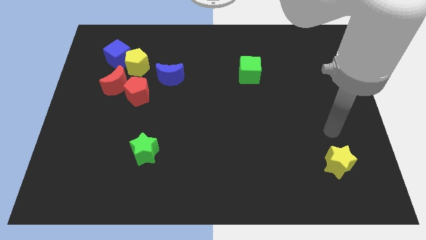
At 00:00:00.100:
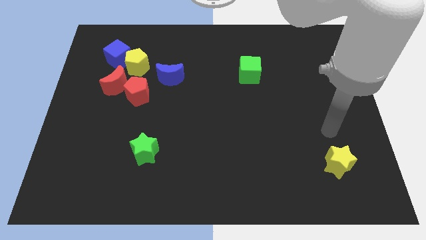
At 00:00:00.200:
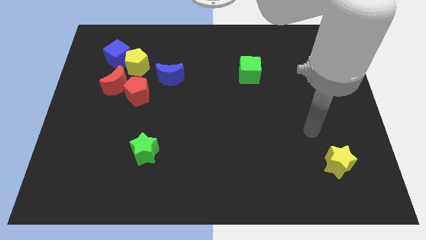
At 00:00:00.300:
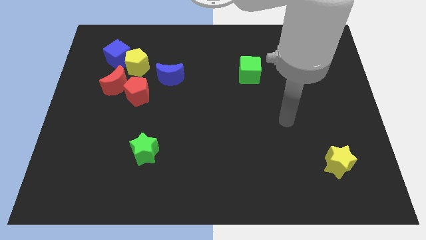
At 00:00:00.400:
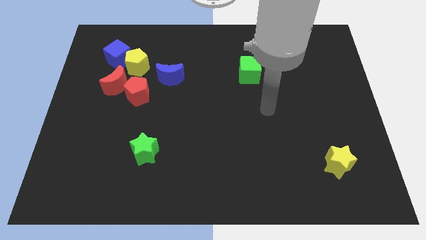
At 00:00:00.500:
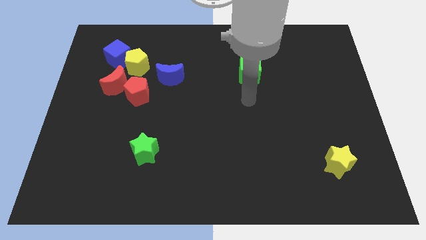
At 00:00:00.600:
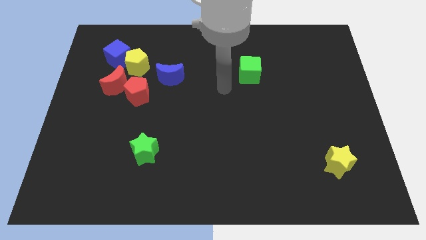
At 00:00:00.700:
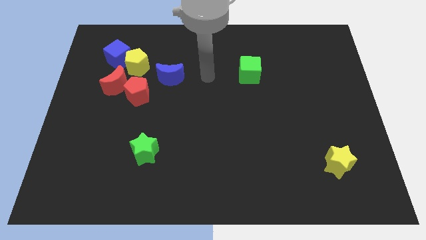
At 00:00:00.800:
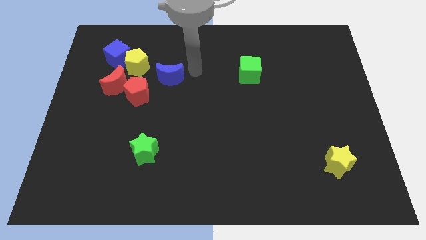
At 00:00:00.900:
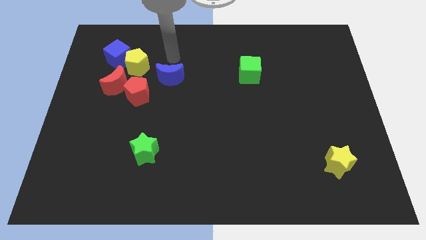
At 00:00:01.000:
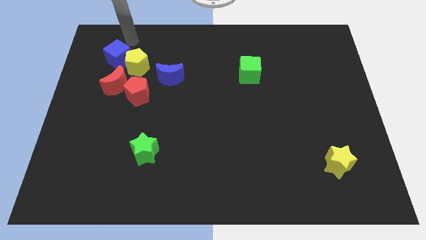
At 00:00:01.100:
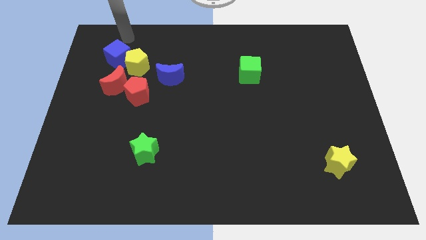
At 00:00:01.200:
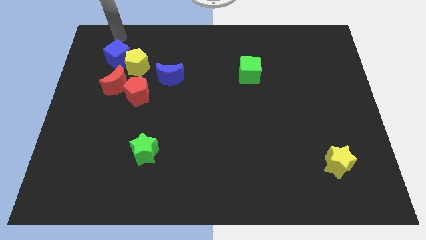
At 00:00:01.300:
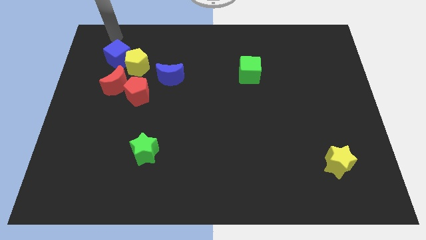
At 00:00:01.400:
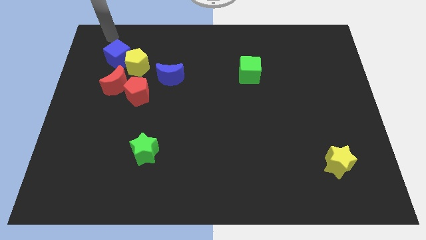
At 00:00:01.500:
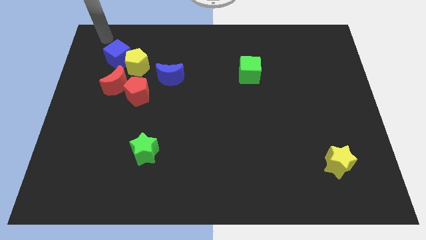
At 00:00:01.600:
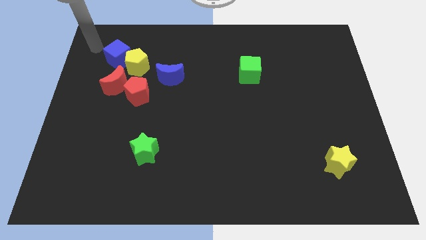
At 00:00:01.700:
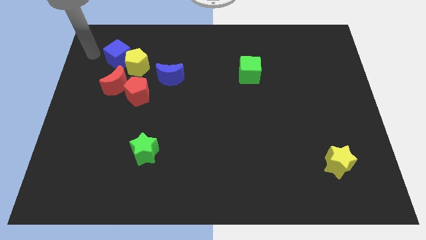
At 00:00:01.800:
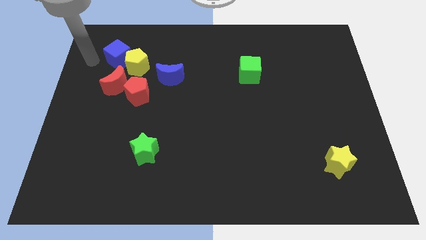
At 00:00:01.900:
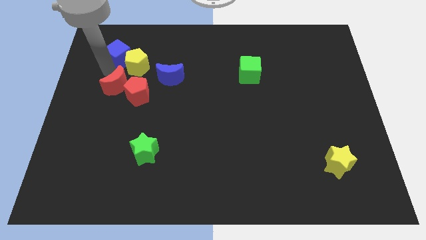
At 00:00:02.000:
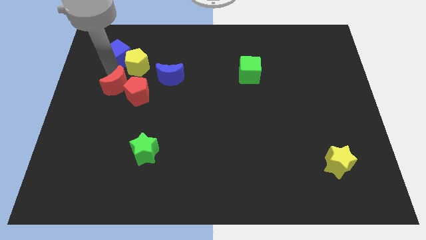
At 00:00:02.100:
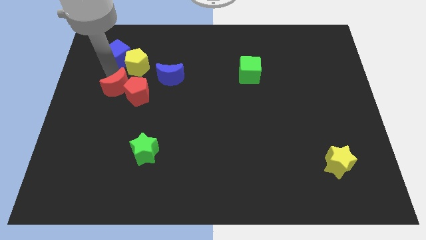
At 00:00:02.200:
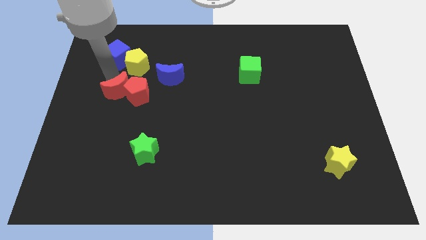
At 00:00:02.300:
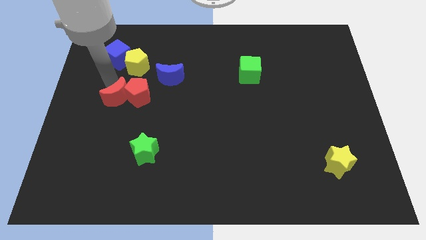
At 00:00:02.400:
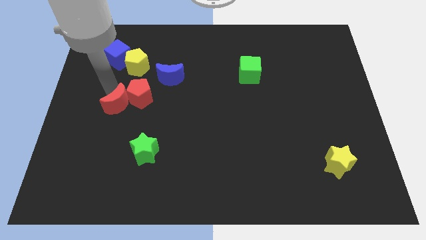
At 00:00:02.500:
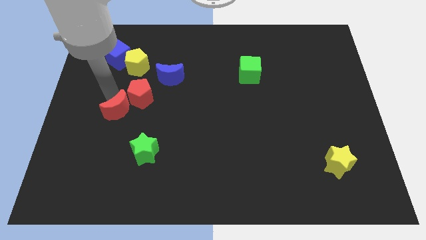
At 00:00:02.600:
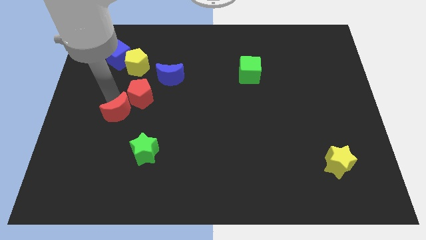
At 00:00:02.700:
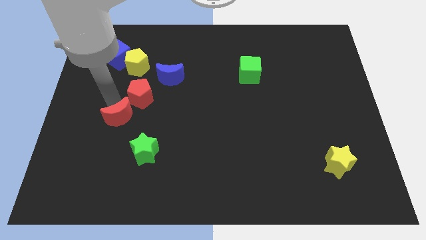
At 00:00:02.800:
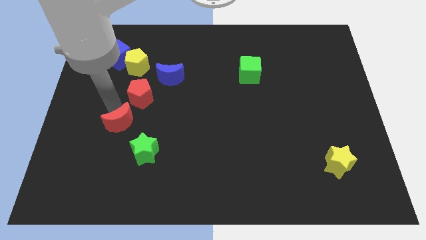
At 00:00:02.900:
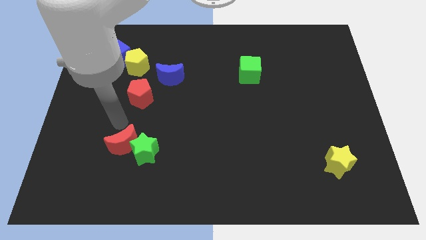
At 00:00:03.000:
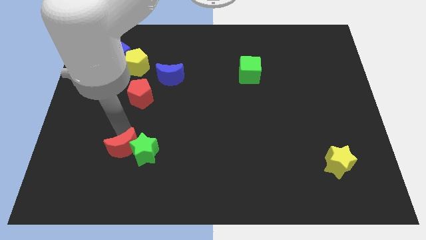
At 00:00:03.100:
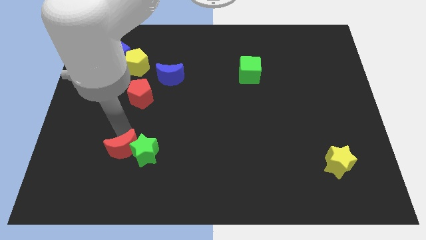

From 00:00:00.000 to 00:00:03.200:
put the red moon close to the green star

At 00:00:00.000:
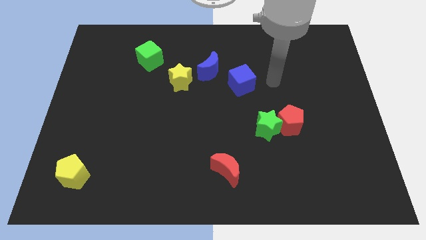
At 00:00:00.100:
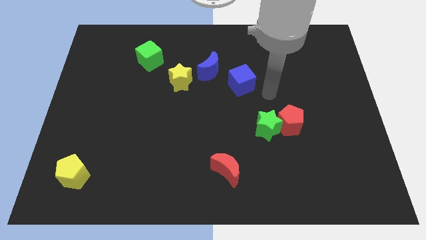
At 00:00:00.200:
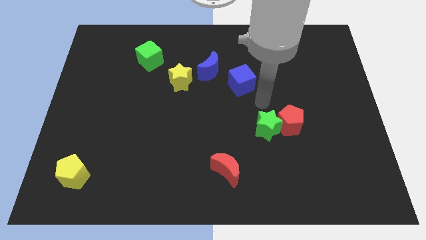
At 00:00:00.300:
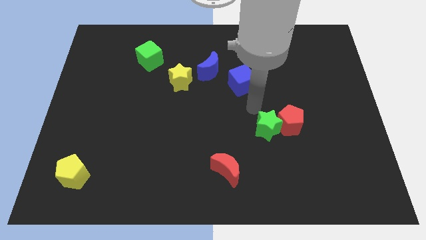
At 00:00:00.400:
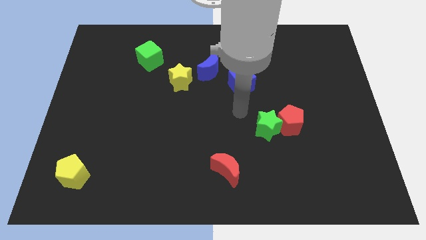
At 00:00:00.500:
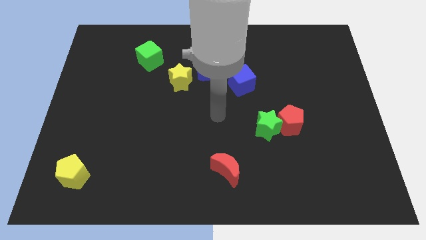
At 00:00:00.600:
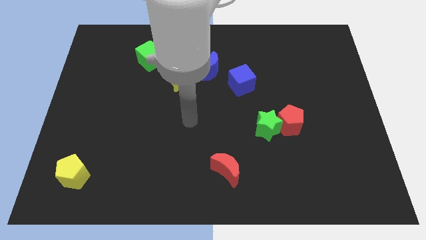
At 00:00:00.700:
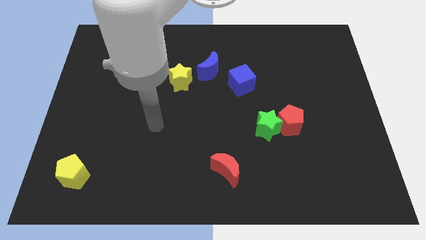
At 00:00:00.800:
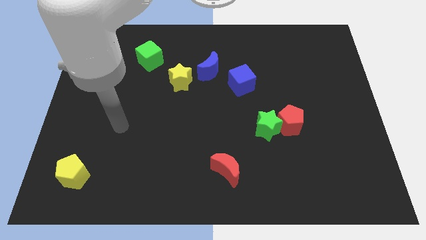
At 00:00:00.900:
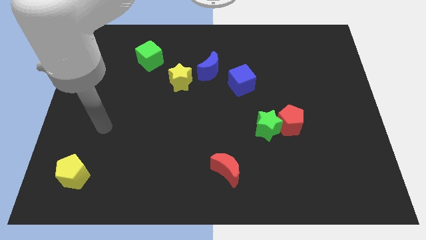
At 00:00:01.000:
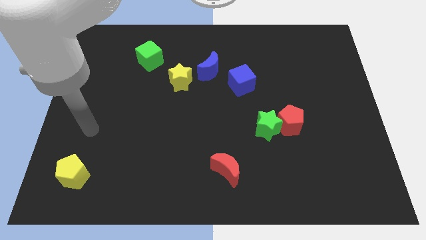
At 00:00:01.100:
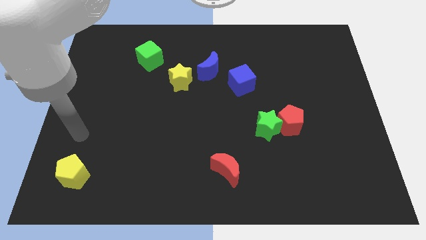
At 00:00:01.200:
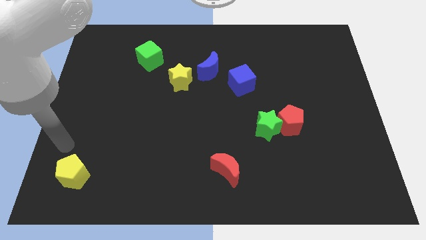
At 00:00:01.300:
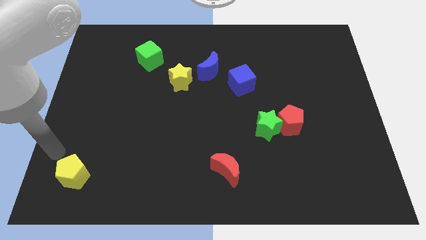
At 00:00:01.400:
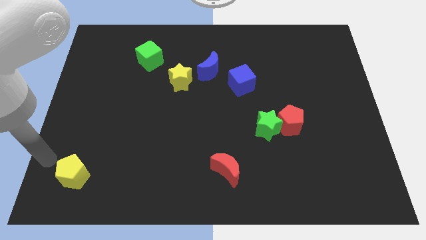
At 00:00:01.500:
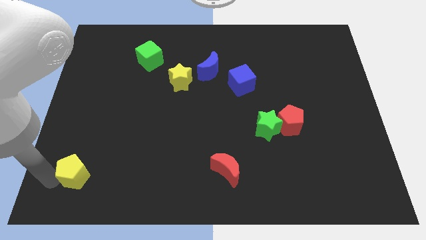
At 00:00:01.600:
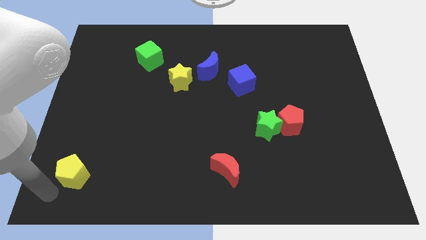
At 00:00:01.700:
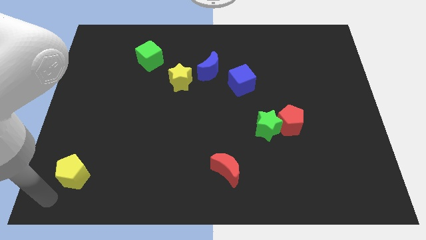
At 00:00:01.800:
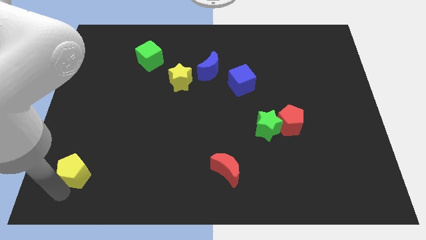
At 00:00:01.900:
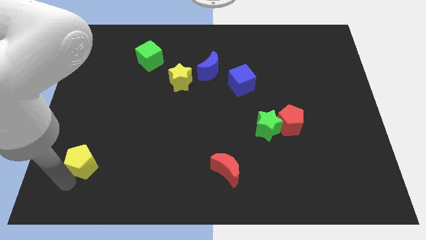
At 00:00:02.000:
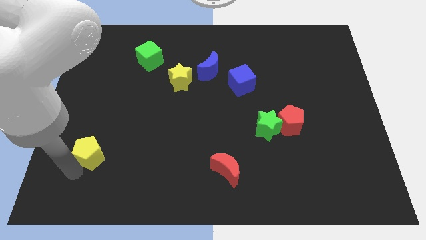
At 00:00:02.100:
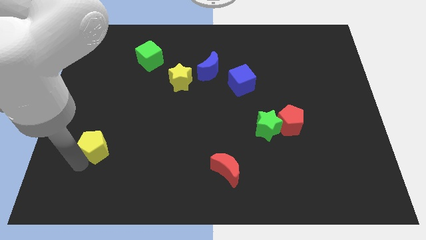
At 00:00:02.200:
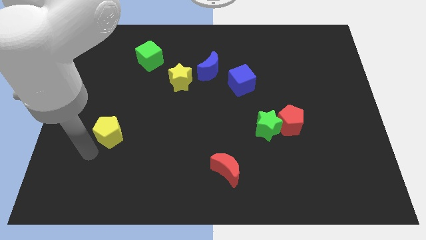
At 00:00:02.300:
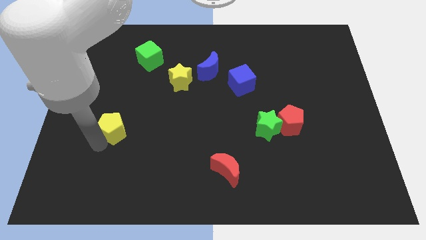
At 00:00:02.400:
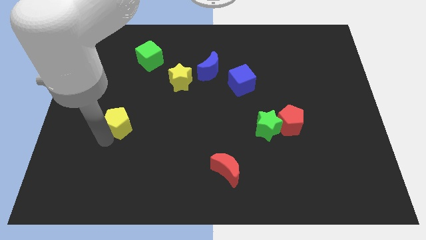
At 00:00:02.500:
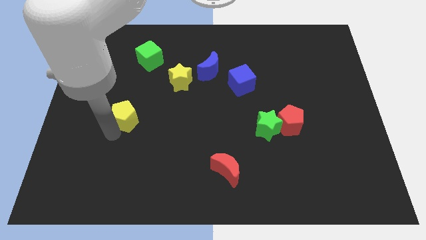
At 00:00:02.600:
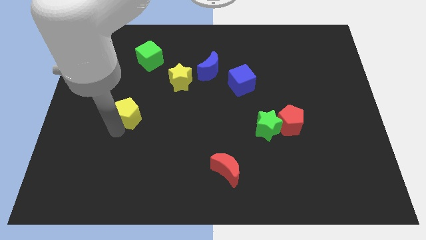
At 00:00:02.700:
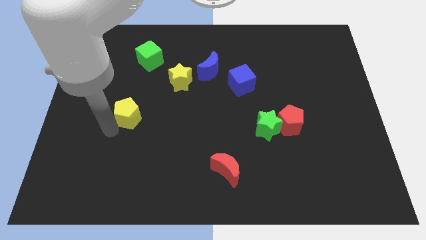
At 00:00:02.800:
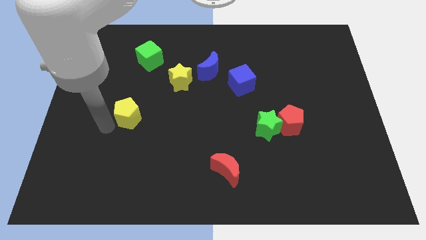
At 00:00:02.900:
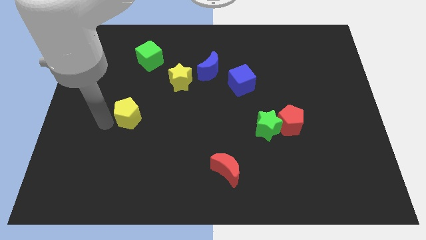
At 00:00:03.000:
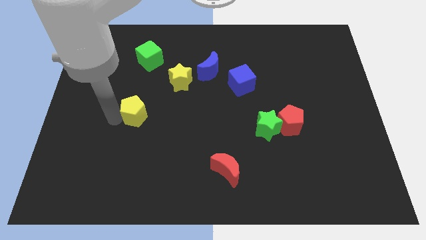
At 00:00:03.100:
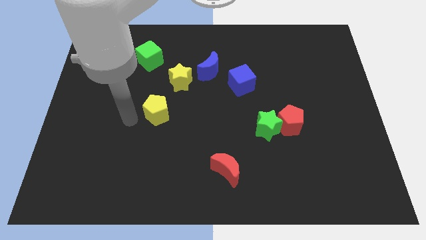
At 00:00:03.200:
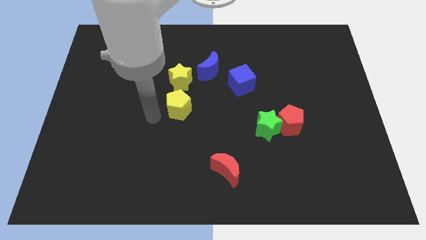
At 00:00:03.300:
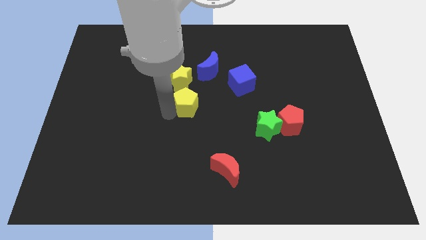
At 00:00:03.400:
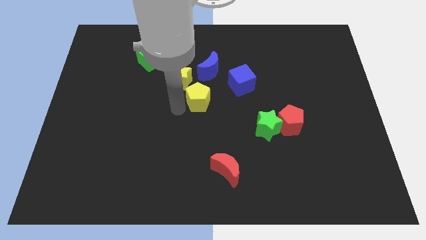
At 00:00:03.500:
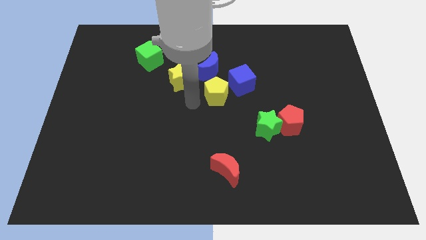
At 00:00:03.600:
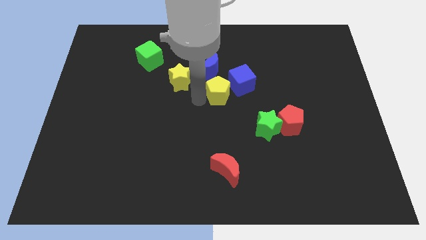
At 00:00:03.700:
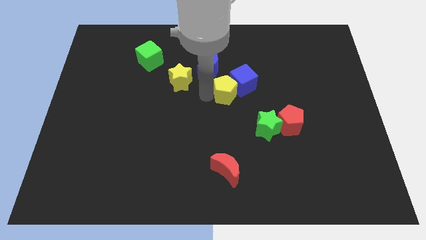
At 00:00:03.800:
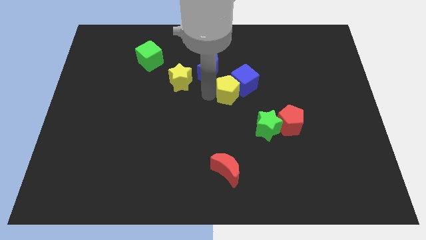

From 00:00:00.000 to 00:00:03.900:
move the yellow pentagon to the blue cube

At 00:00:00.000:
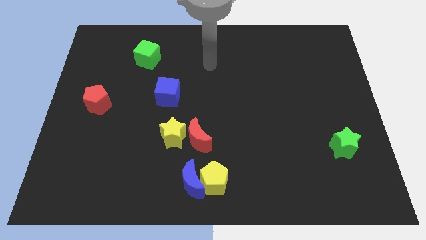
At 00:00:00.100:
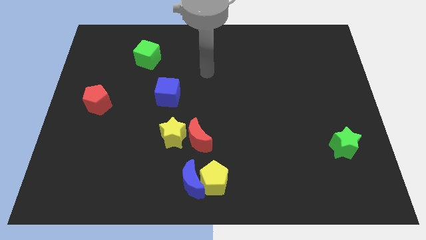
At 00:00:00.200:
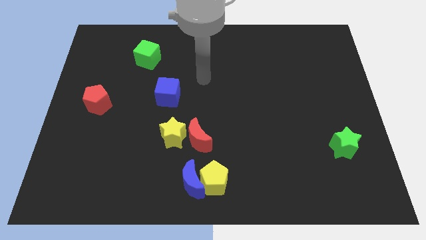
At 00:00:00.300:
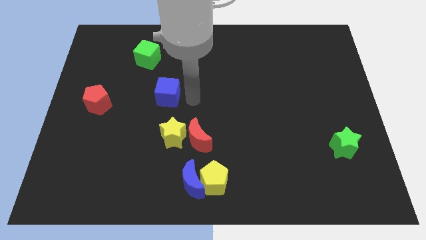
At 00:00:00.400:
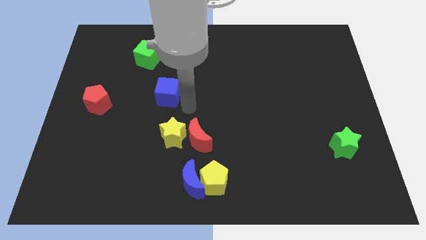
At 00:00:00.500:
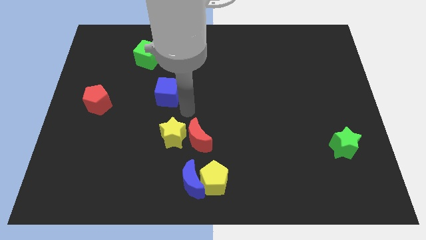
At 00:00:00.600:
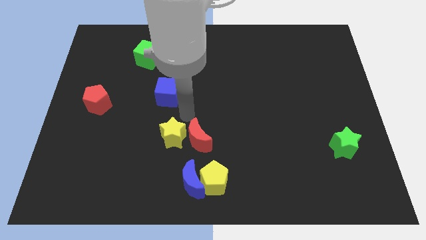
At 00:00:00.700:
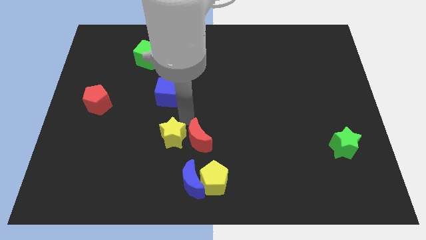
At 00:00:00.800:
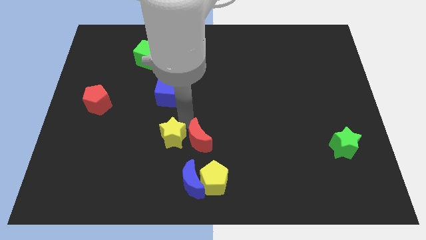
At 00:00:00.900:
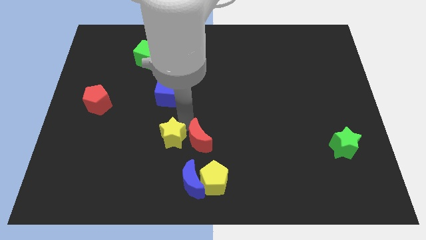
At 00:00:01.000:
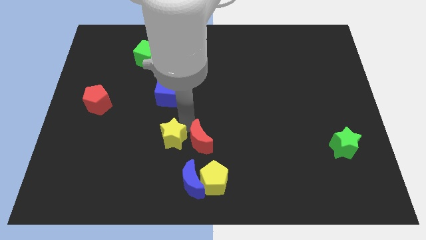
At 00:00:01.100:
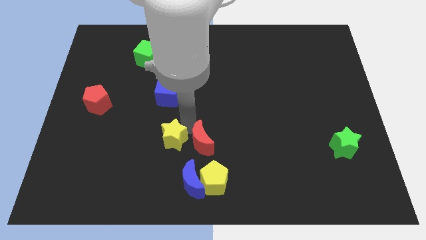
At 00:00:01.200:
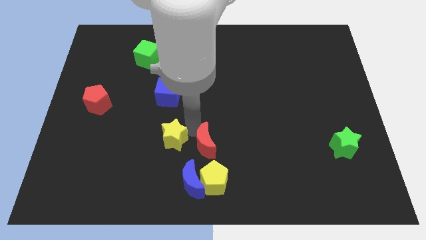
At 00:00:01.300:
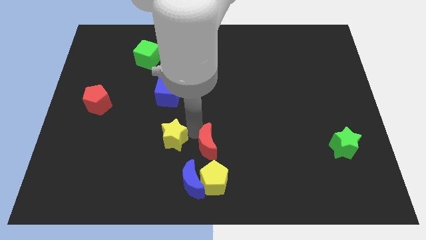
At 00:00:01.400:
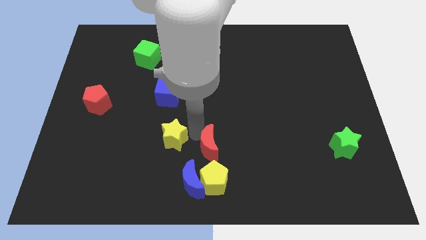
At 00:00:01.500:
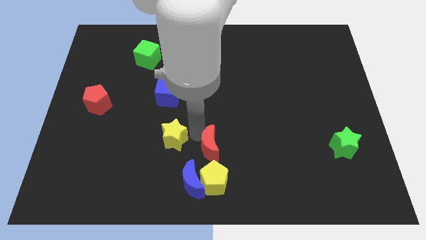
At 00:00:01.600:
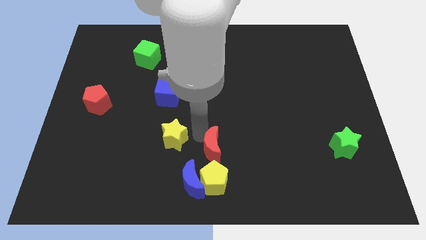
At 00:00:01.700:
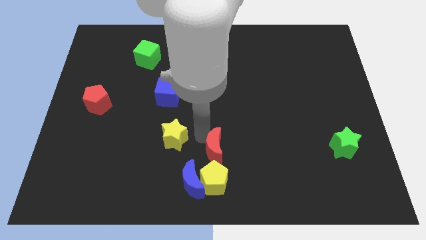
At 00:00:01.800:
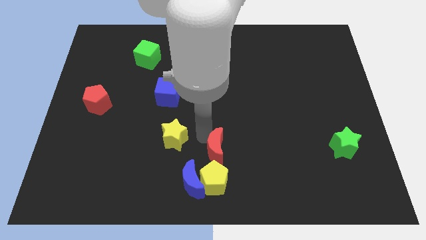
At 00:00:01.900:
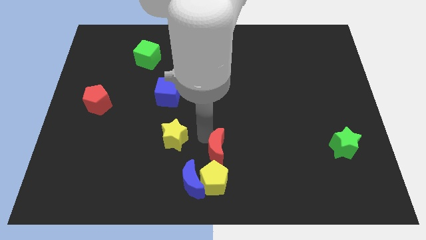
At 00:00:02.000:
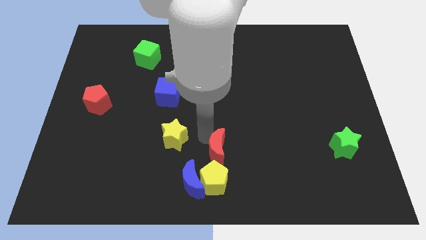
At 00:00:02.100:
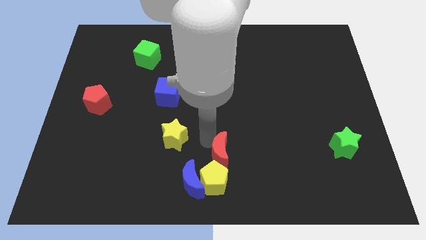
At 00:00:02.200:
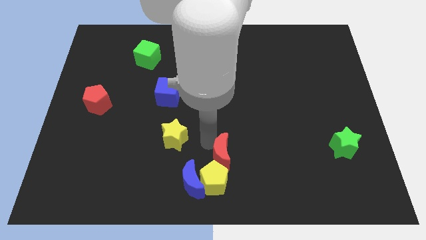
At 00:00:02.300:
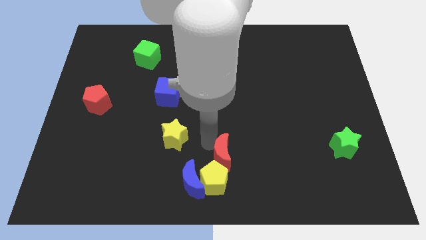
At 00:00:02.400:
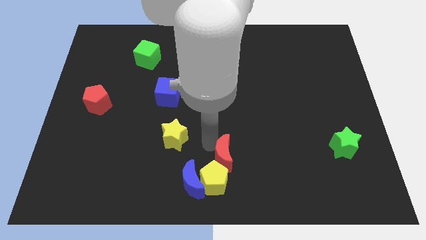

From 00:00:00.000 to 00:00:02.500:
move the red moon to the yellow pentagon
